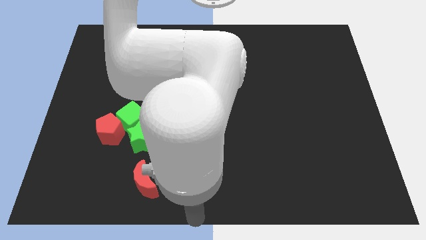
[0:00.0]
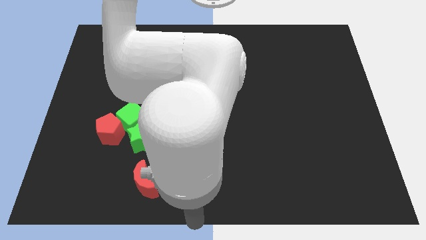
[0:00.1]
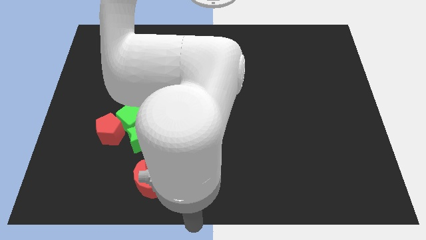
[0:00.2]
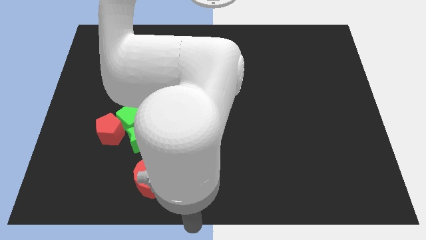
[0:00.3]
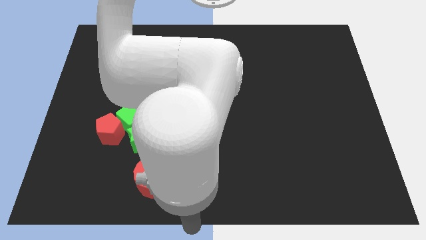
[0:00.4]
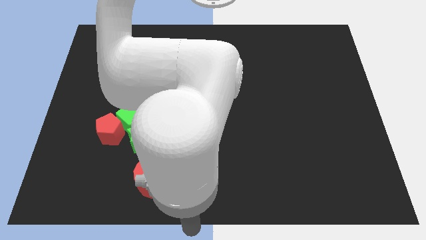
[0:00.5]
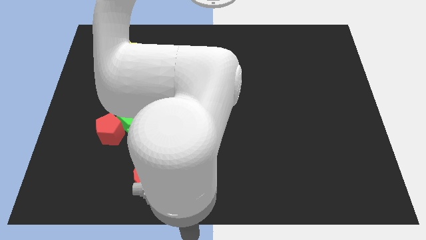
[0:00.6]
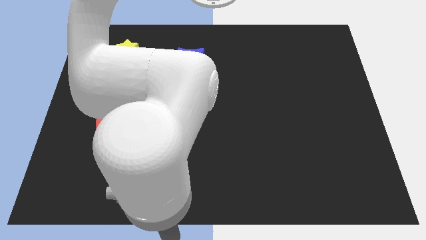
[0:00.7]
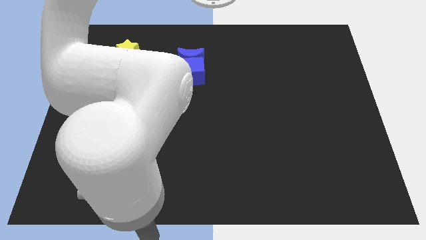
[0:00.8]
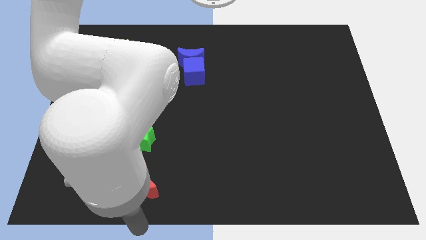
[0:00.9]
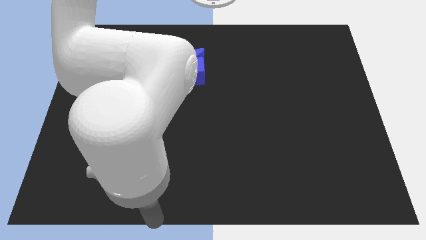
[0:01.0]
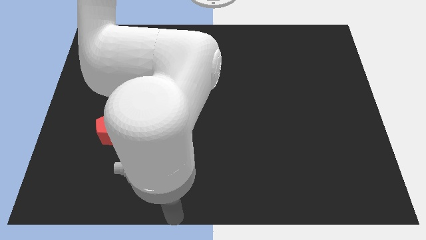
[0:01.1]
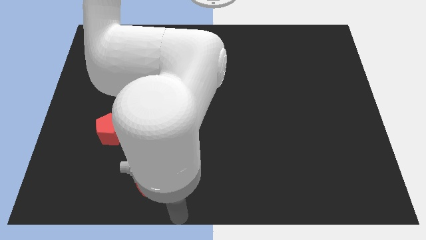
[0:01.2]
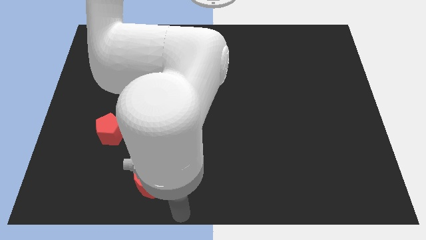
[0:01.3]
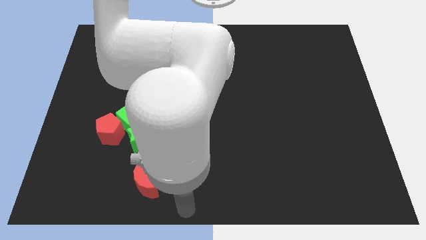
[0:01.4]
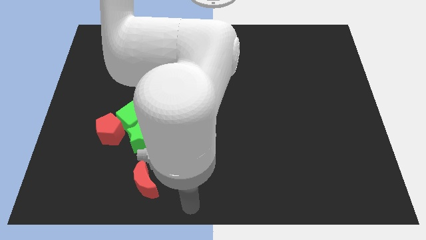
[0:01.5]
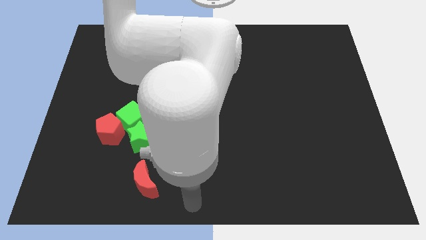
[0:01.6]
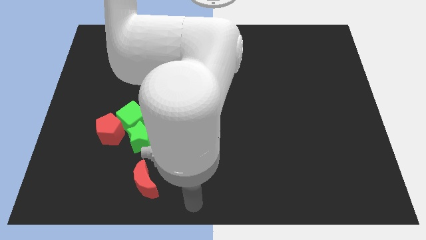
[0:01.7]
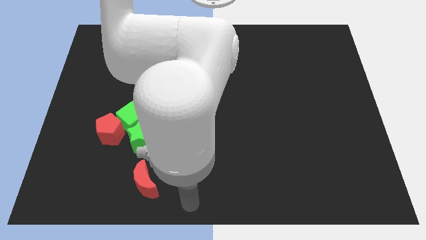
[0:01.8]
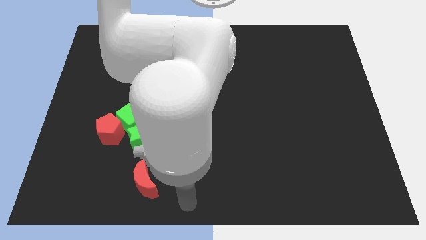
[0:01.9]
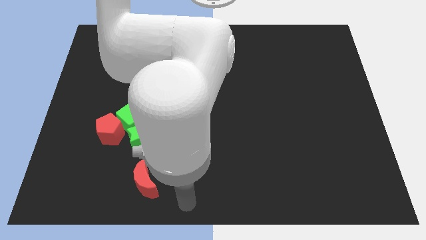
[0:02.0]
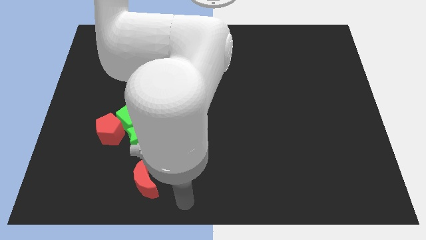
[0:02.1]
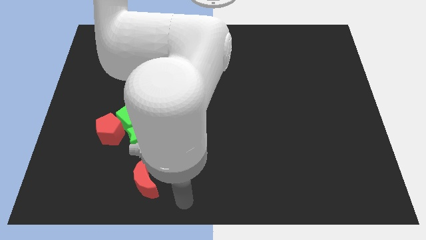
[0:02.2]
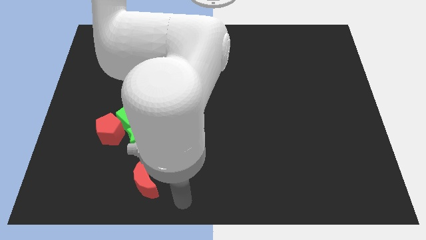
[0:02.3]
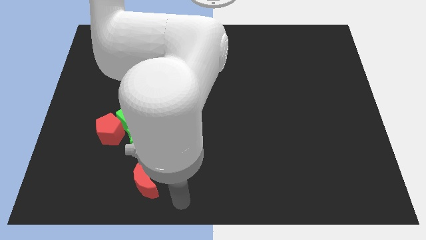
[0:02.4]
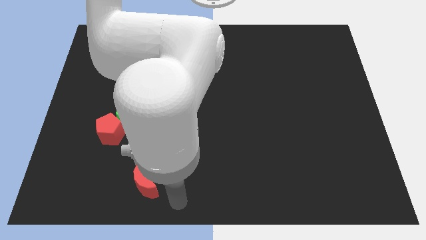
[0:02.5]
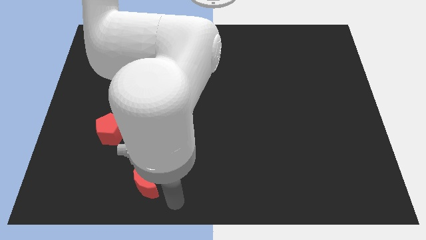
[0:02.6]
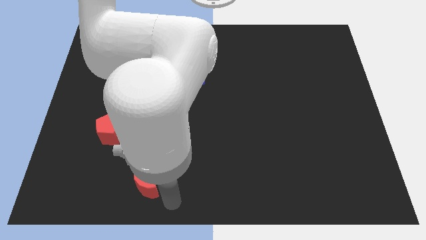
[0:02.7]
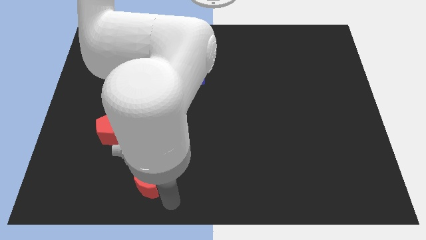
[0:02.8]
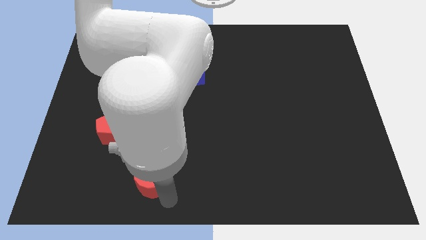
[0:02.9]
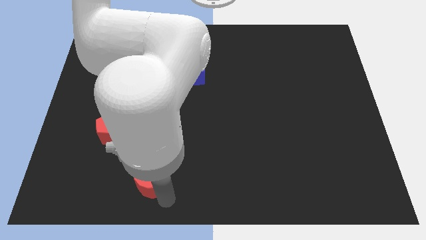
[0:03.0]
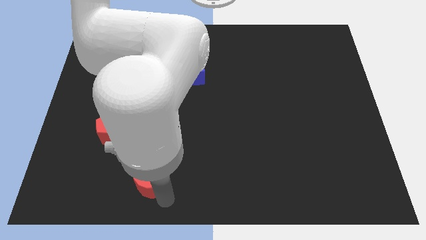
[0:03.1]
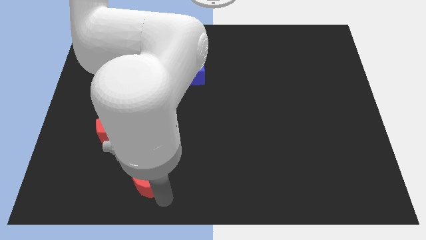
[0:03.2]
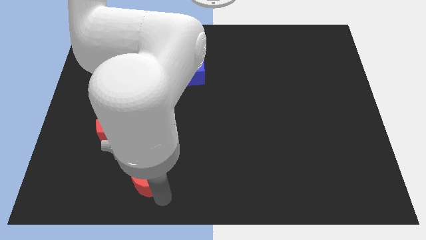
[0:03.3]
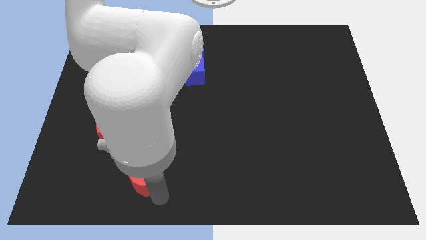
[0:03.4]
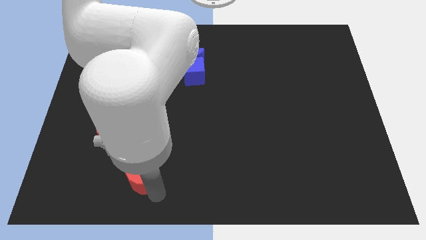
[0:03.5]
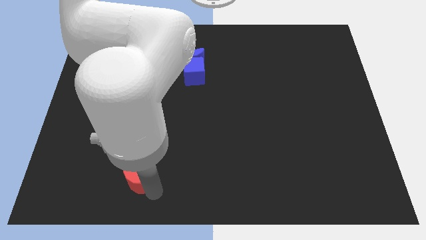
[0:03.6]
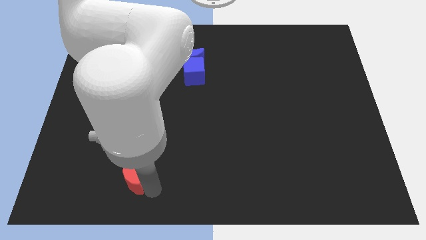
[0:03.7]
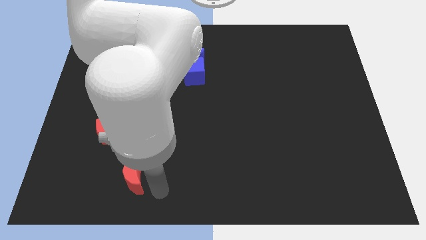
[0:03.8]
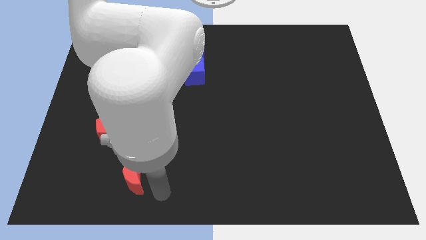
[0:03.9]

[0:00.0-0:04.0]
move the red crescent slightly to the left

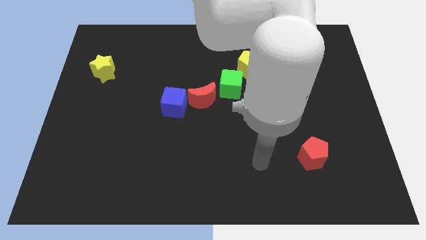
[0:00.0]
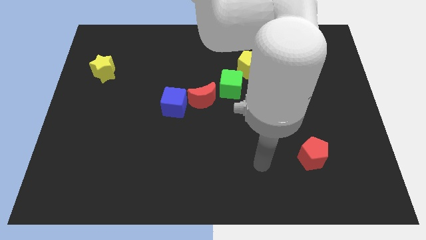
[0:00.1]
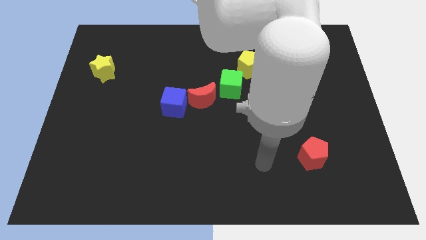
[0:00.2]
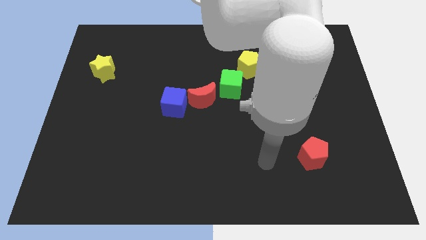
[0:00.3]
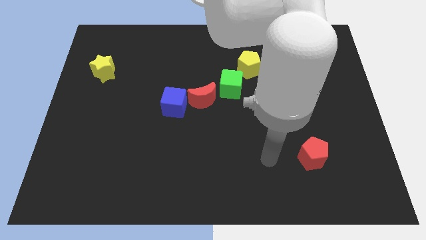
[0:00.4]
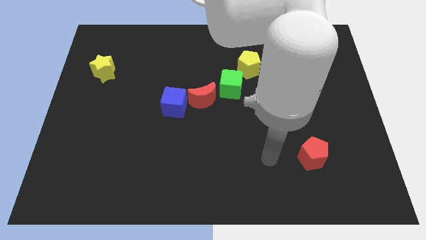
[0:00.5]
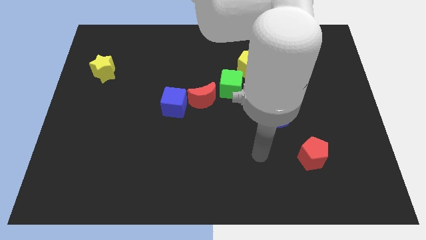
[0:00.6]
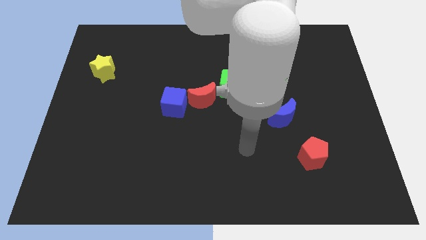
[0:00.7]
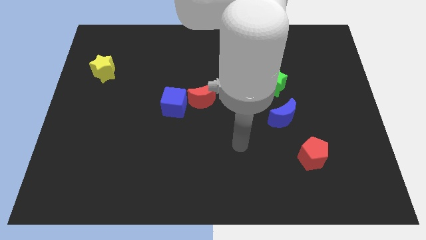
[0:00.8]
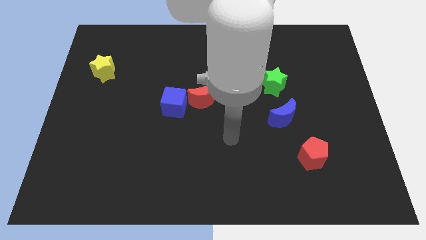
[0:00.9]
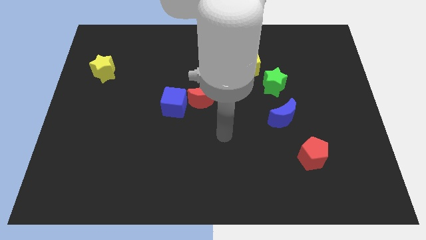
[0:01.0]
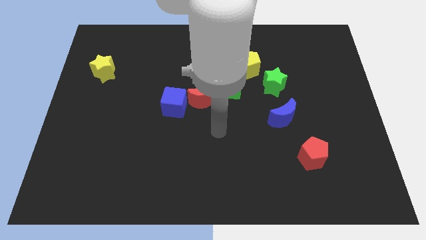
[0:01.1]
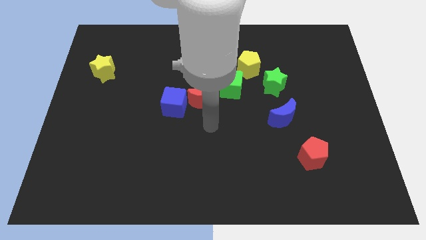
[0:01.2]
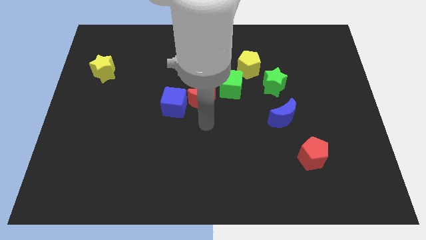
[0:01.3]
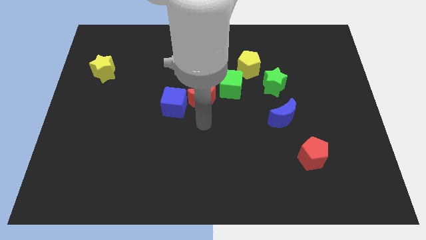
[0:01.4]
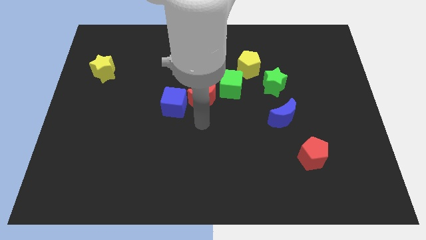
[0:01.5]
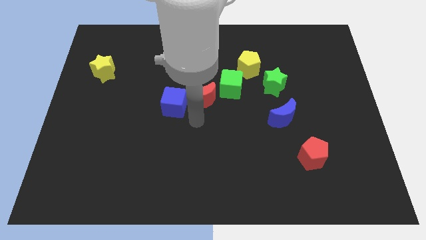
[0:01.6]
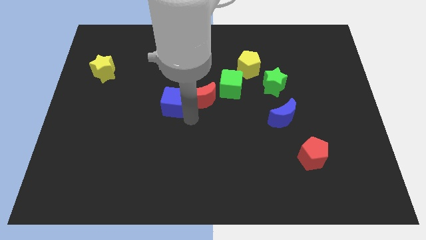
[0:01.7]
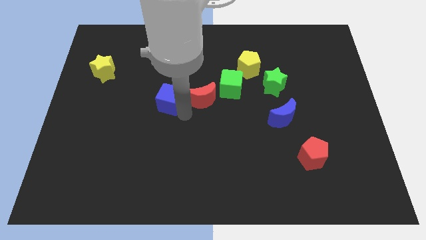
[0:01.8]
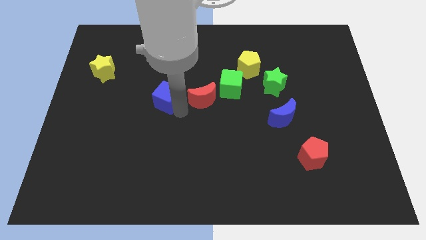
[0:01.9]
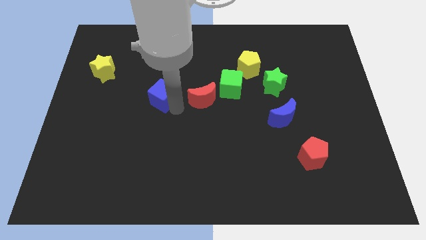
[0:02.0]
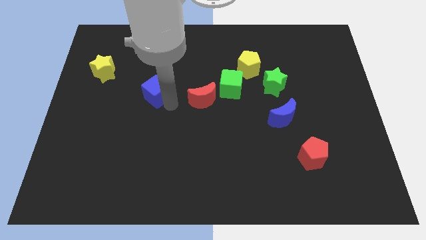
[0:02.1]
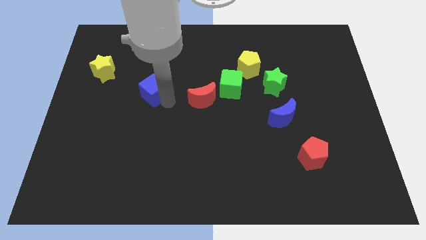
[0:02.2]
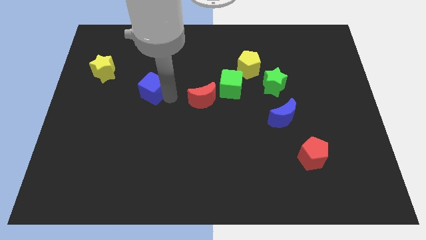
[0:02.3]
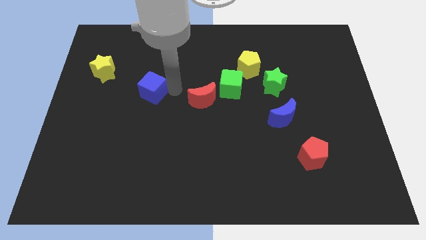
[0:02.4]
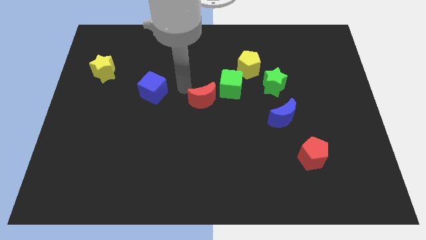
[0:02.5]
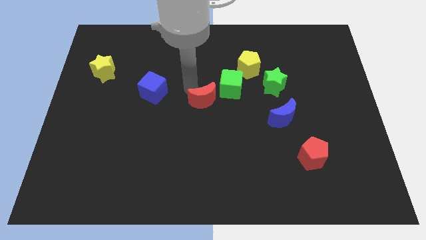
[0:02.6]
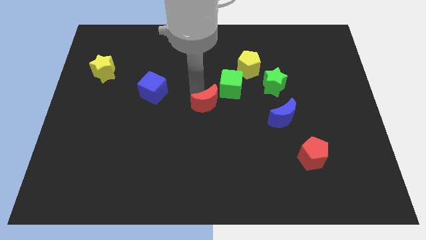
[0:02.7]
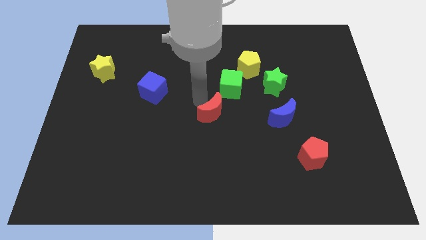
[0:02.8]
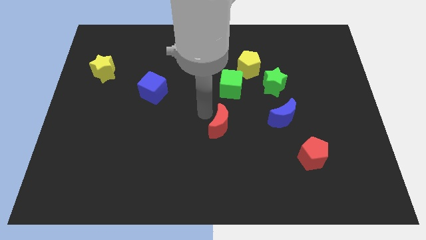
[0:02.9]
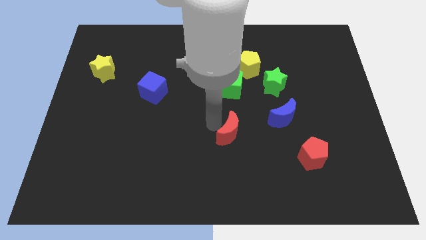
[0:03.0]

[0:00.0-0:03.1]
push the blue cube and red crescent away from each other

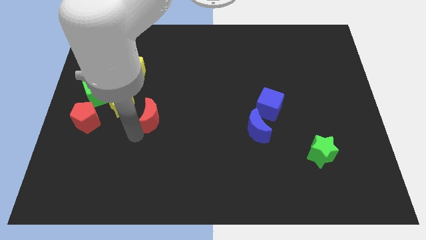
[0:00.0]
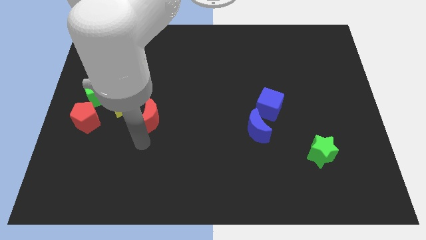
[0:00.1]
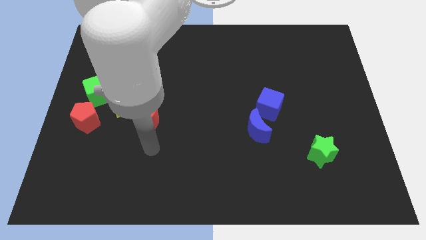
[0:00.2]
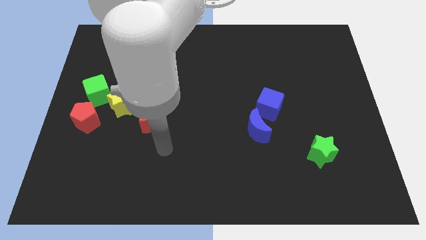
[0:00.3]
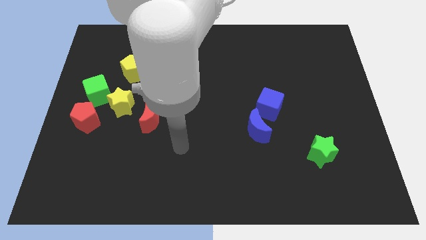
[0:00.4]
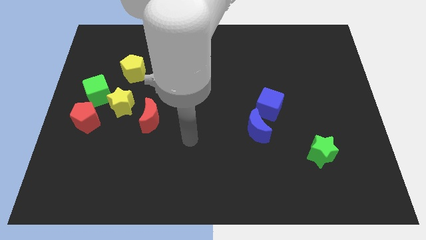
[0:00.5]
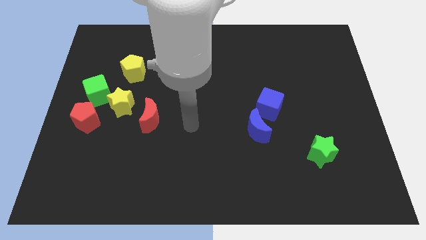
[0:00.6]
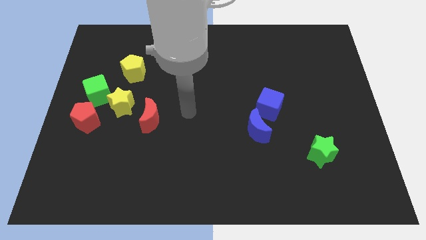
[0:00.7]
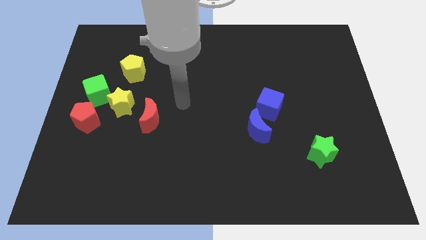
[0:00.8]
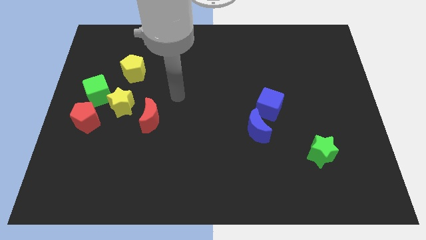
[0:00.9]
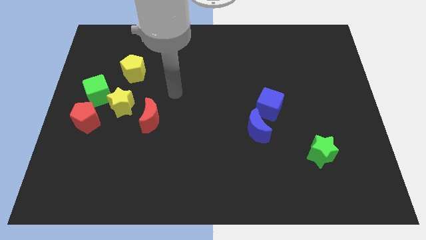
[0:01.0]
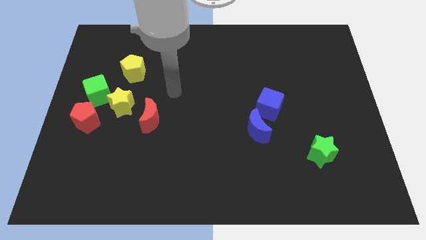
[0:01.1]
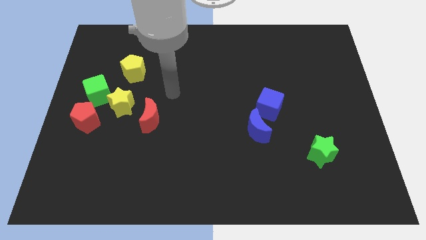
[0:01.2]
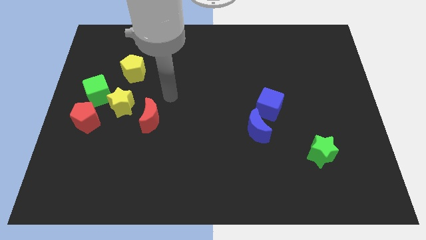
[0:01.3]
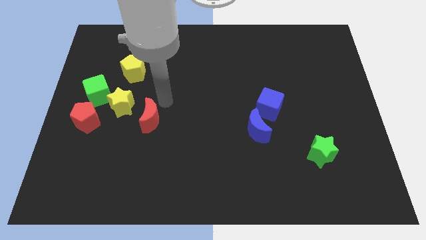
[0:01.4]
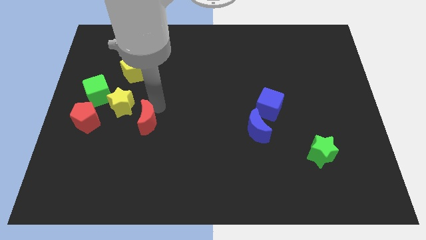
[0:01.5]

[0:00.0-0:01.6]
point your arm at the top right side of red moon

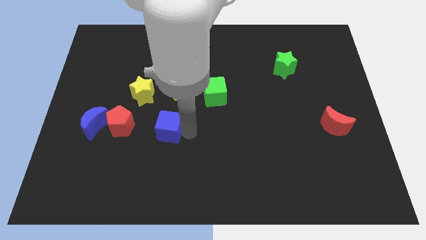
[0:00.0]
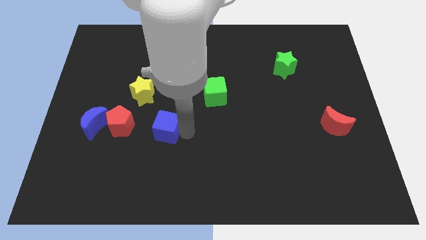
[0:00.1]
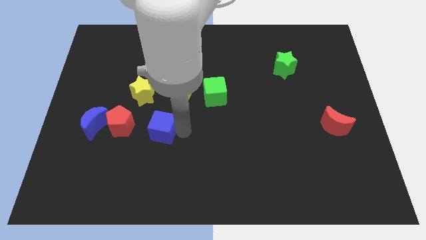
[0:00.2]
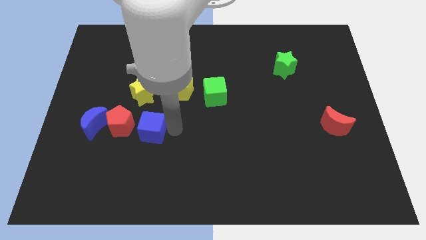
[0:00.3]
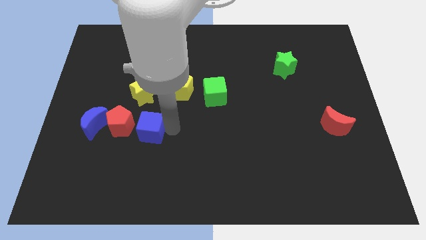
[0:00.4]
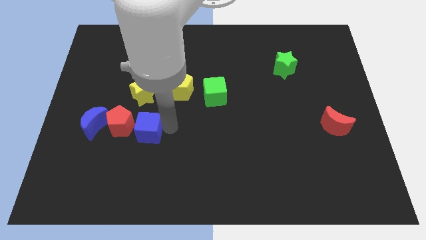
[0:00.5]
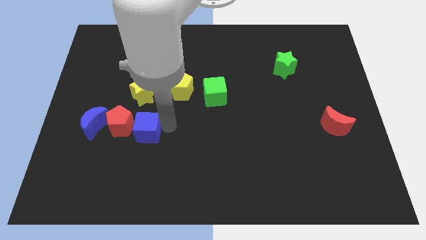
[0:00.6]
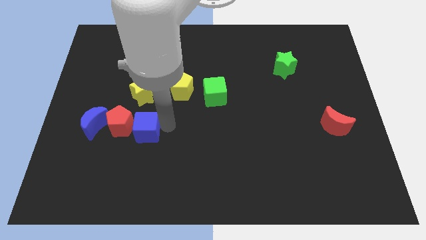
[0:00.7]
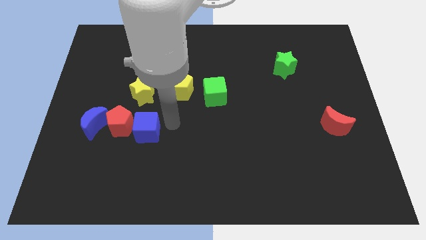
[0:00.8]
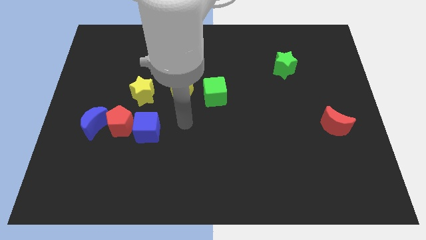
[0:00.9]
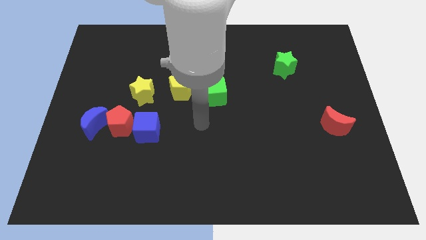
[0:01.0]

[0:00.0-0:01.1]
push the blue cube to the left
